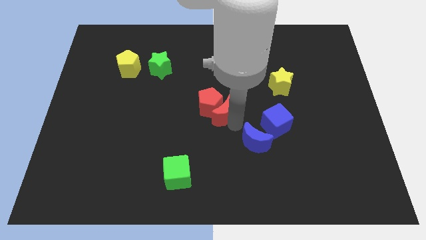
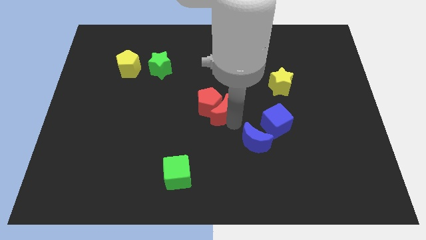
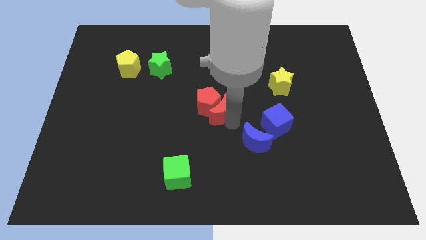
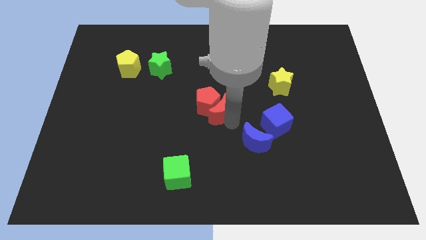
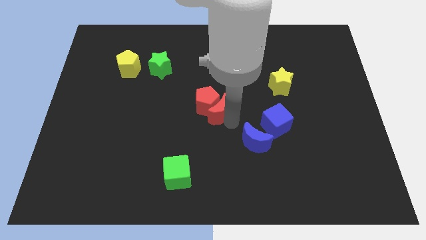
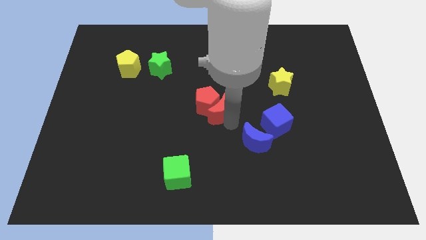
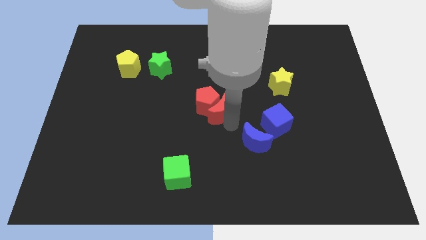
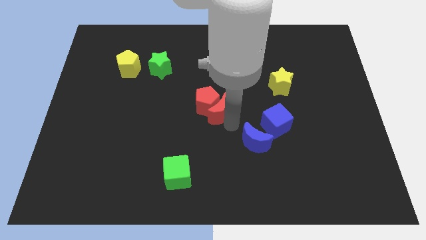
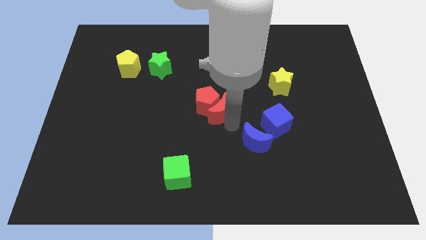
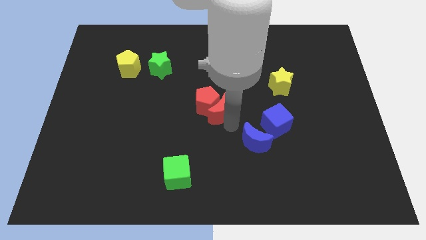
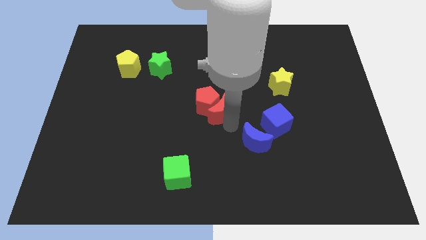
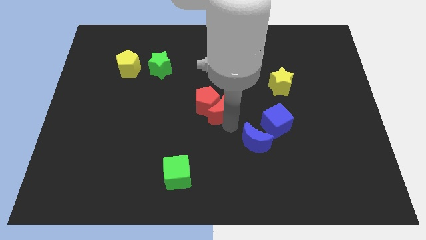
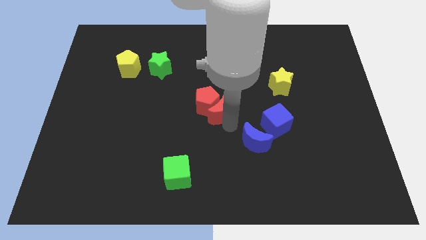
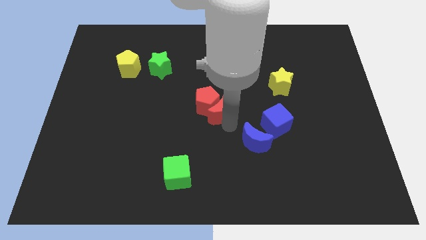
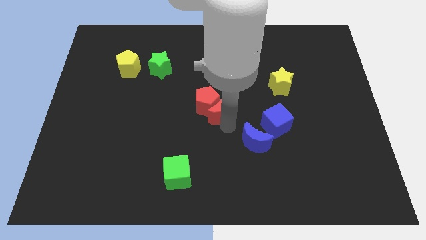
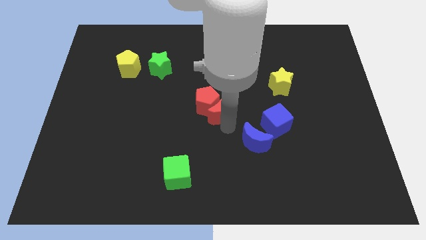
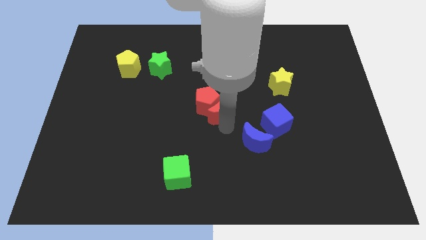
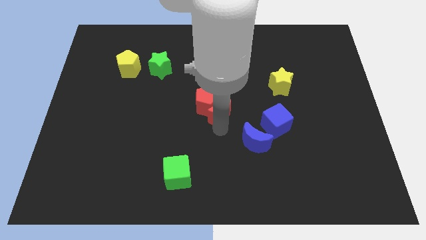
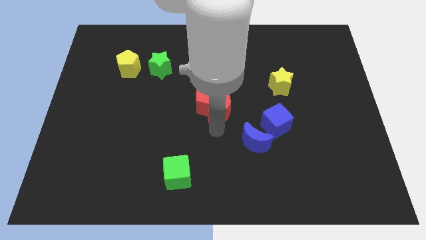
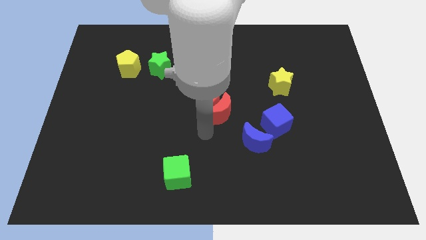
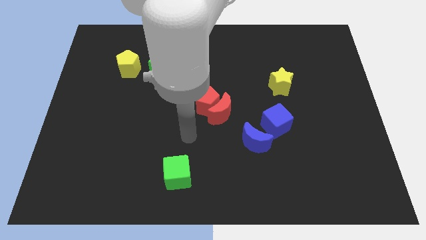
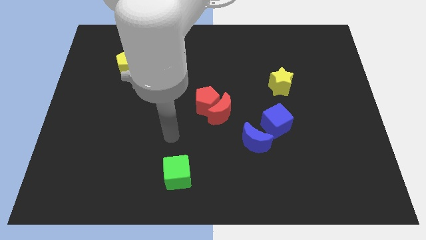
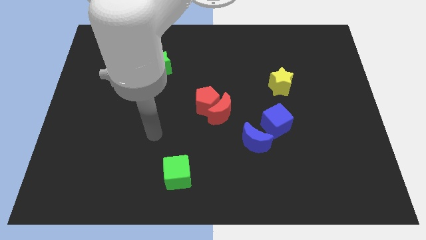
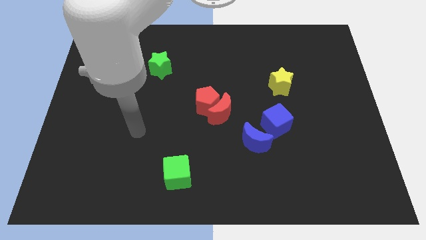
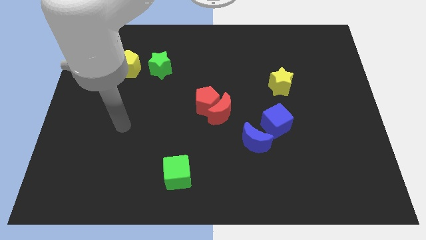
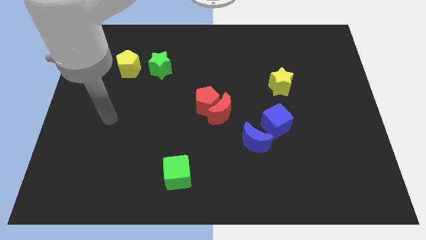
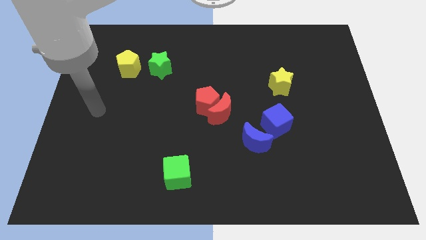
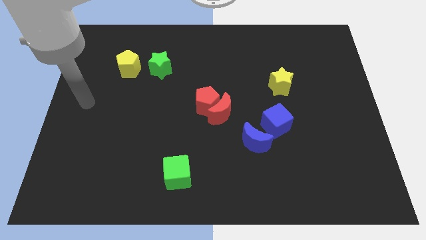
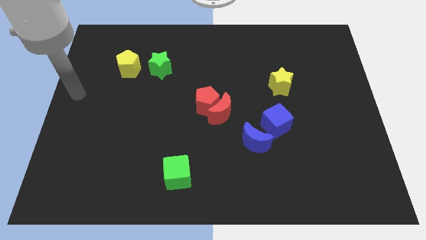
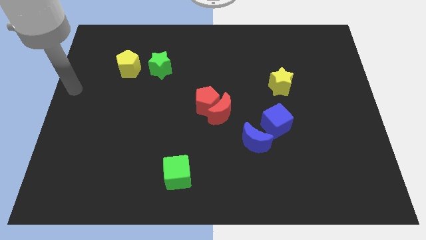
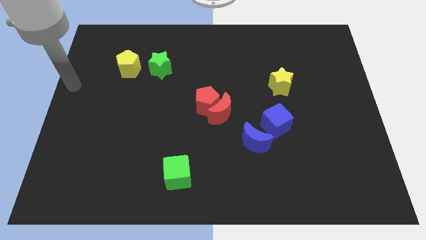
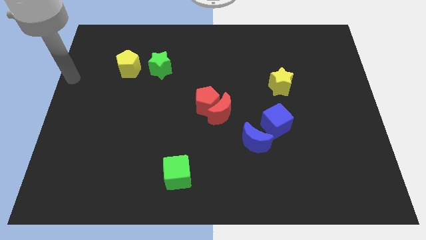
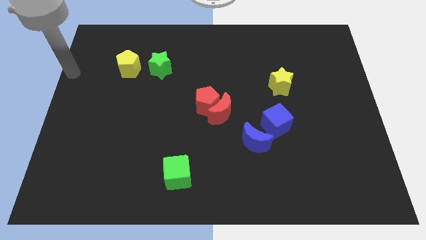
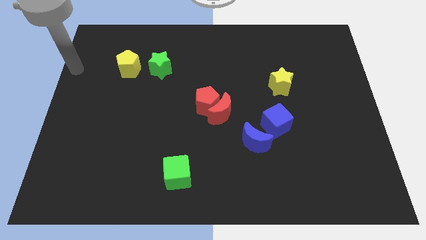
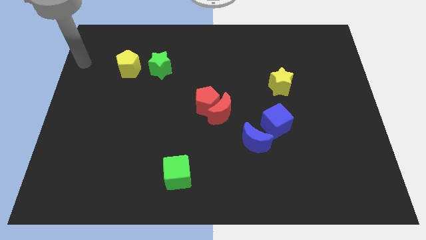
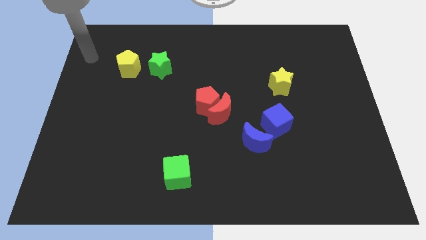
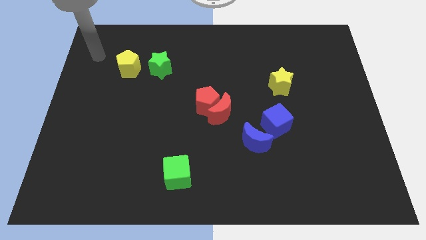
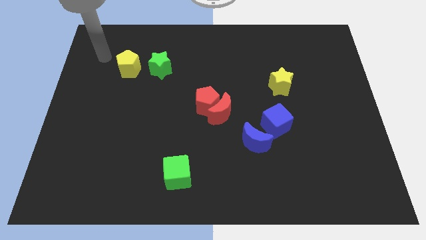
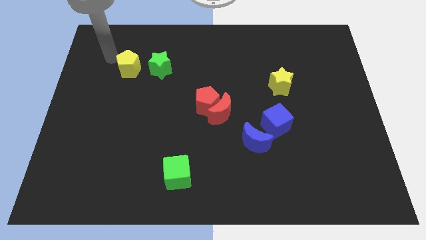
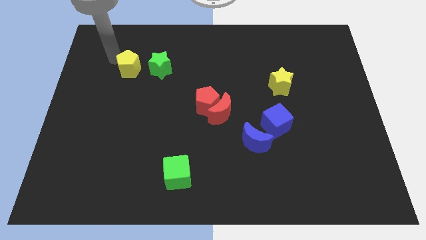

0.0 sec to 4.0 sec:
move the arm from the center of the board to the left to yellow pentagon

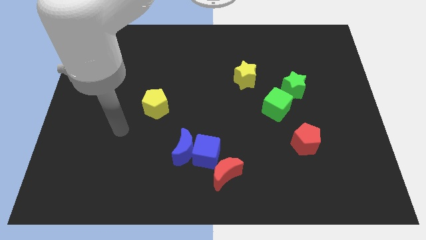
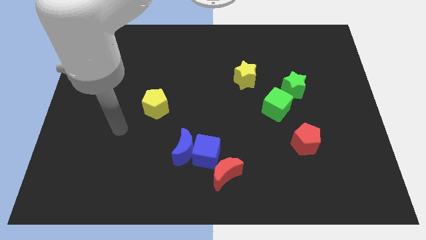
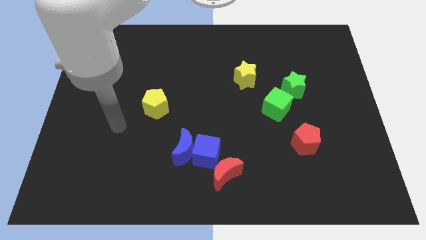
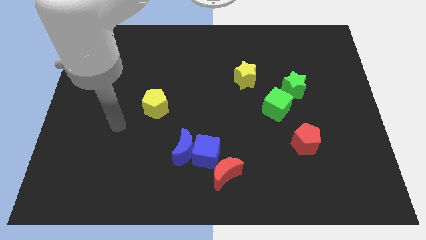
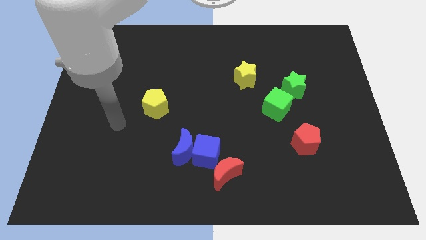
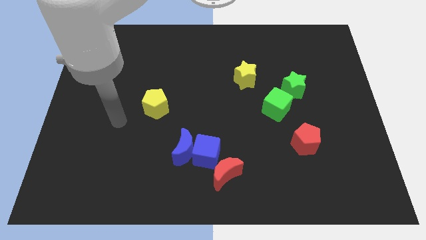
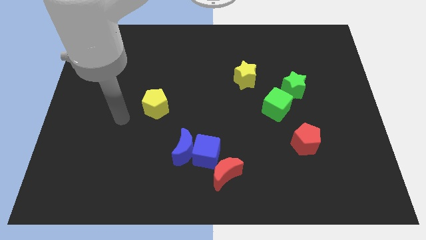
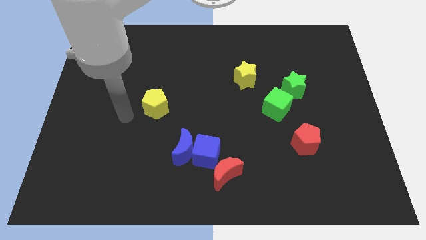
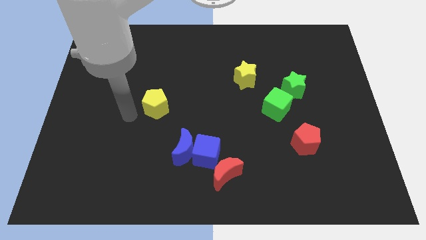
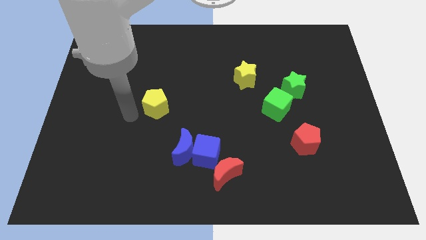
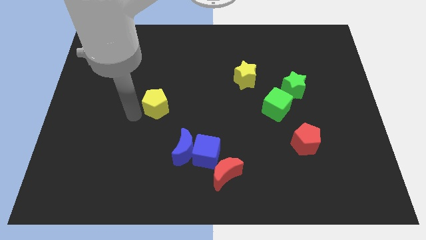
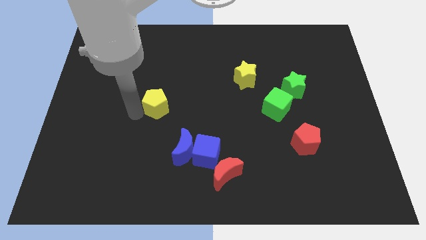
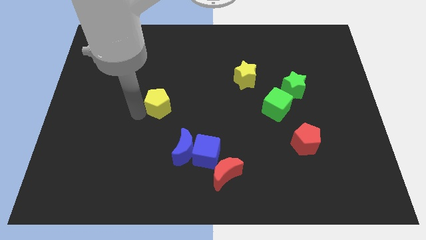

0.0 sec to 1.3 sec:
place arm on the left side of yellow pentagon

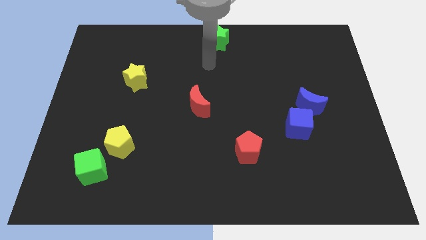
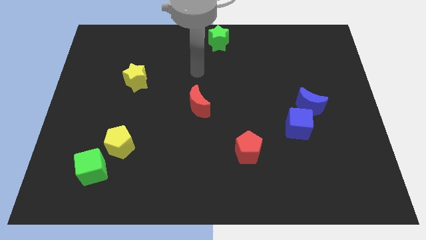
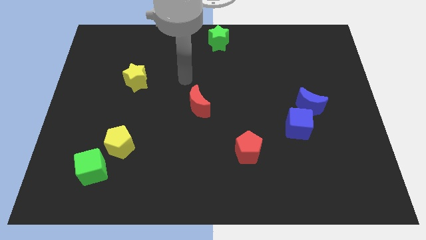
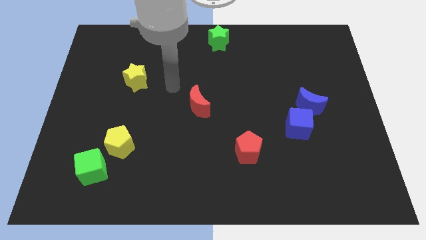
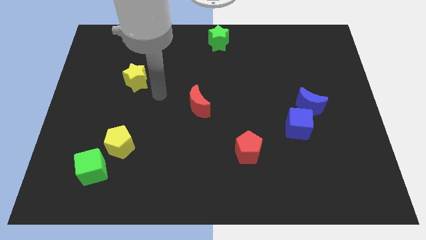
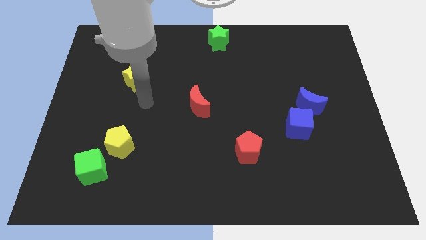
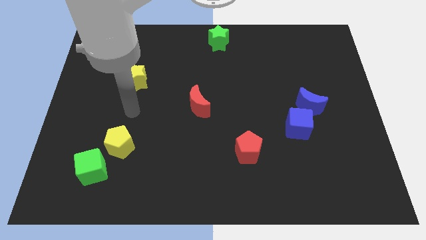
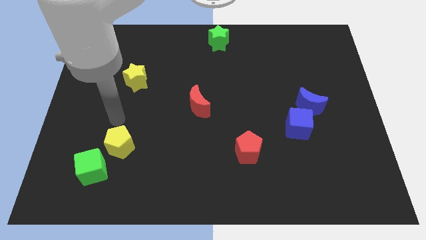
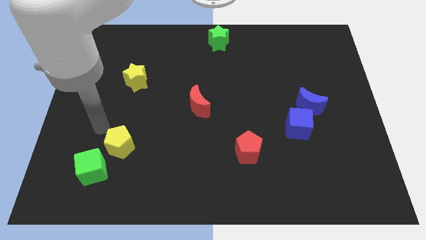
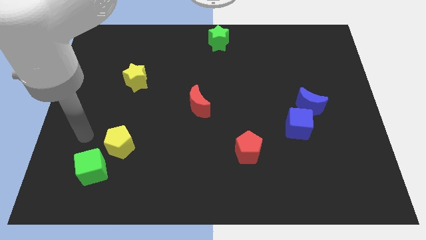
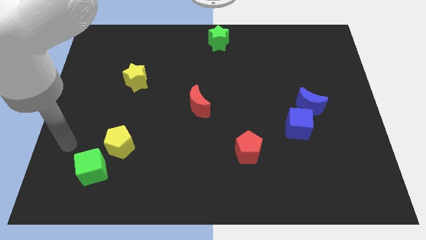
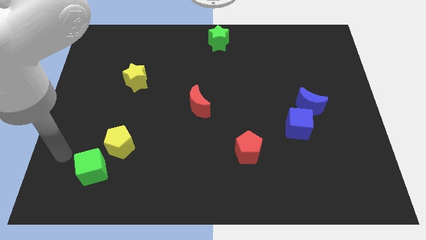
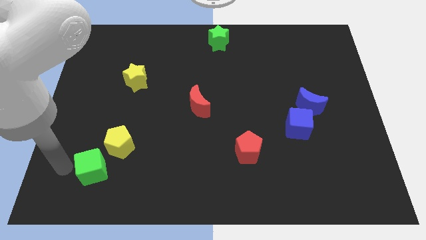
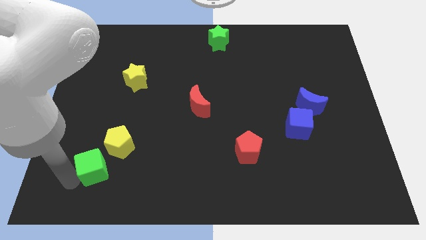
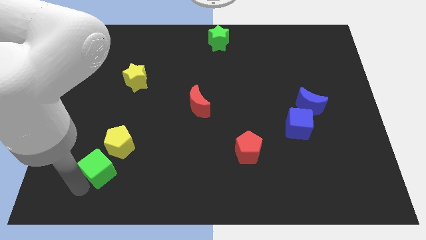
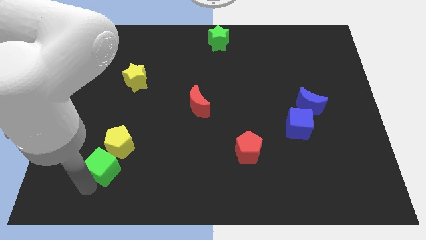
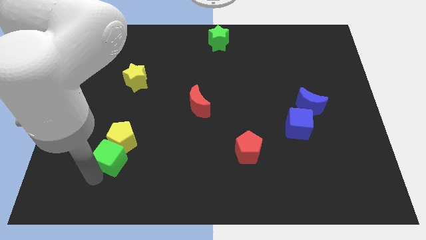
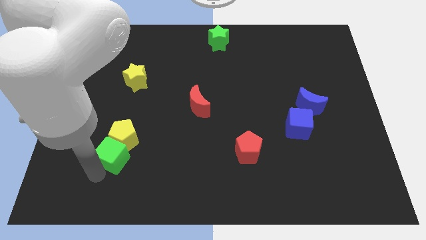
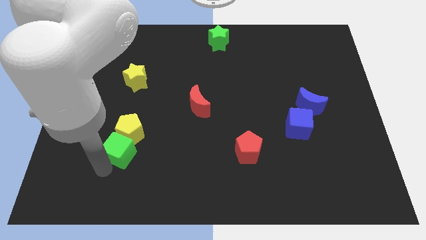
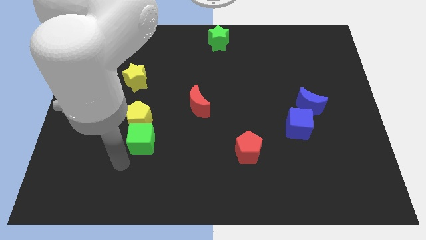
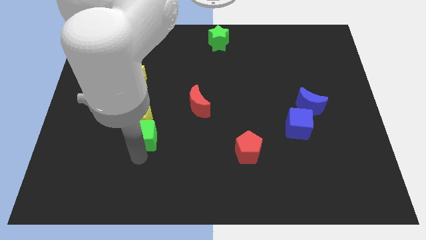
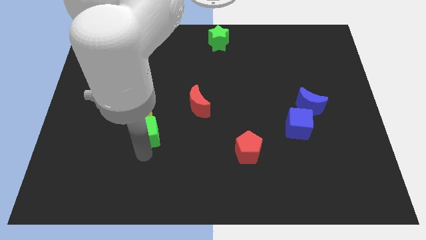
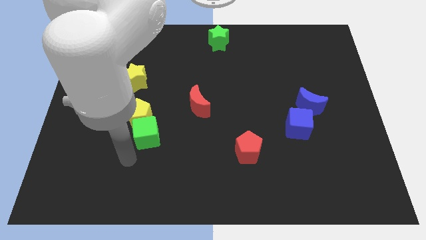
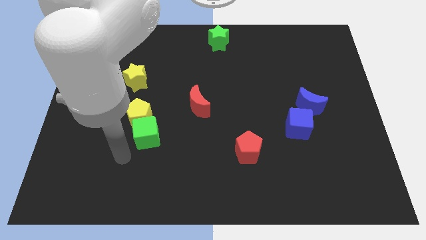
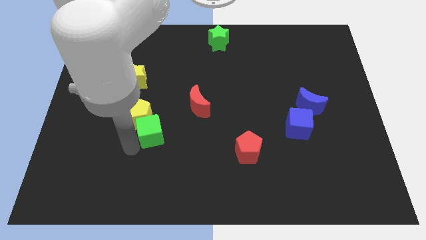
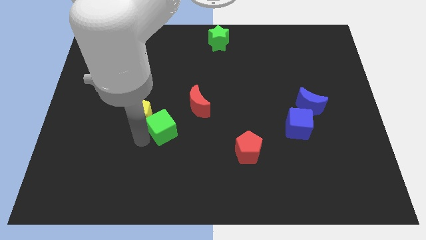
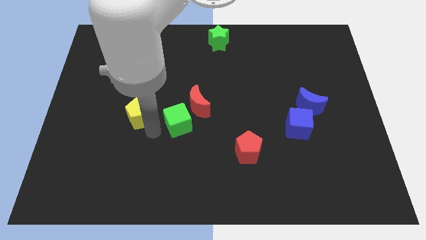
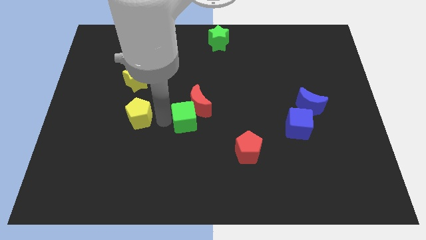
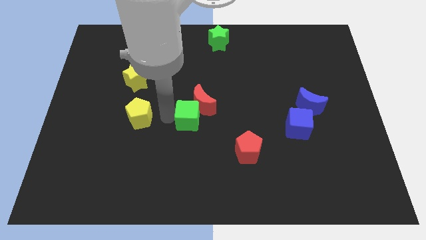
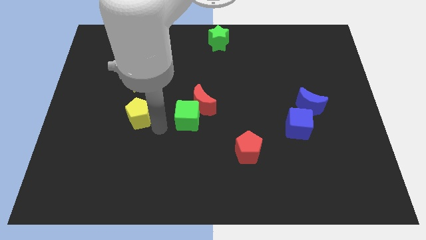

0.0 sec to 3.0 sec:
place the green cube to the bottom left of the red crescent

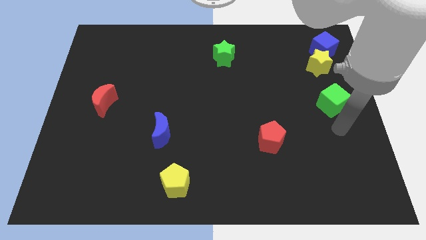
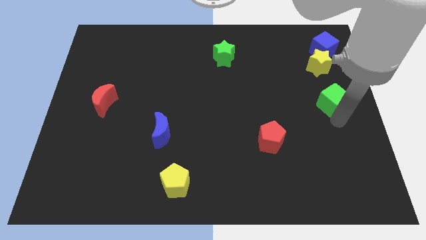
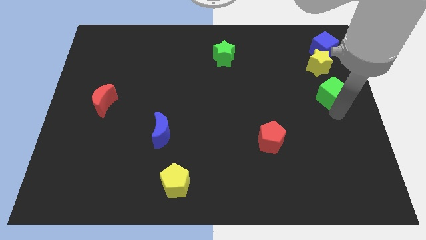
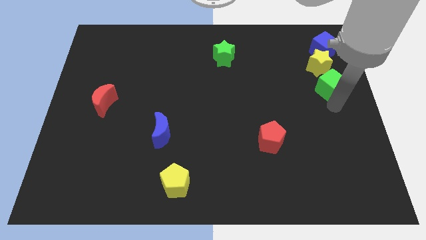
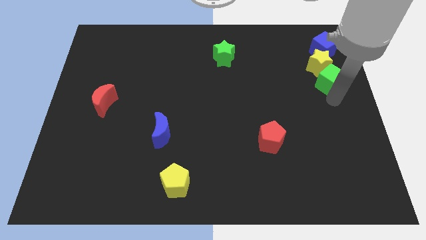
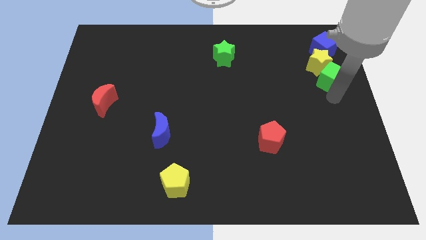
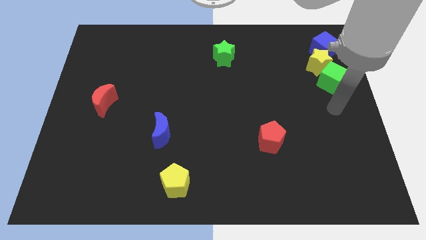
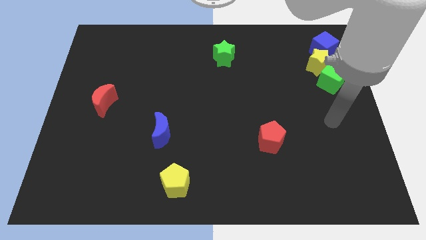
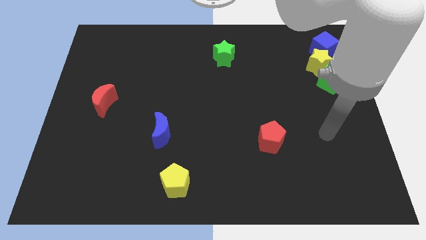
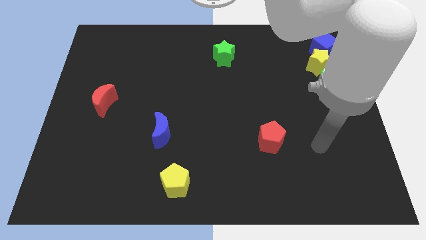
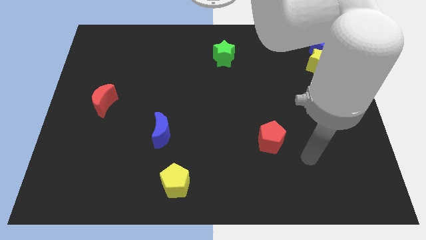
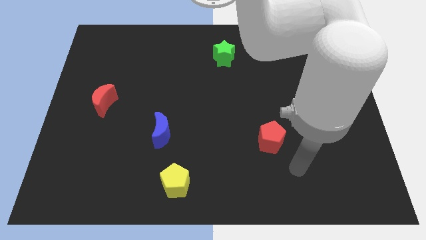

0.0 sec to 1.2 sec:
drag the green cube and place it below the yellow star
